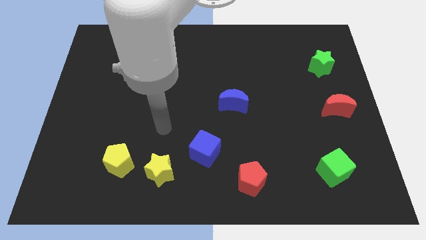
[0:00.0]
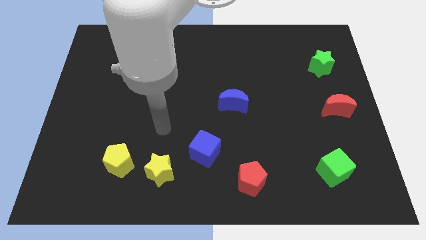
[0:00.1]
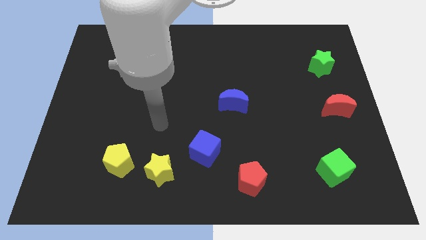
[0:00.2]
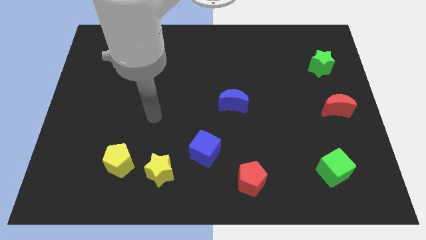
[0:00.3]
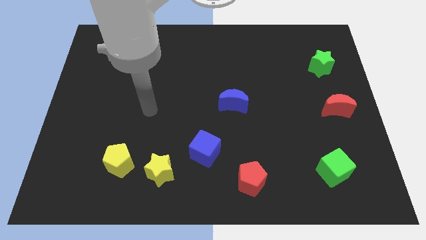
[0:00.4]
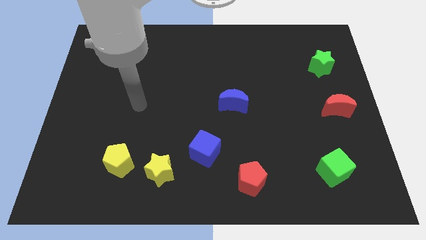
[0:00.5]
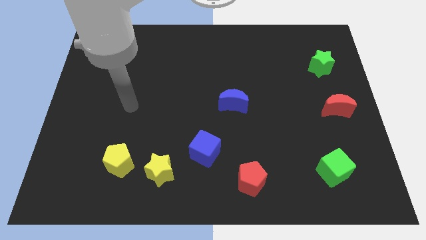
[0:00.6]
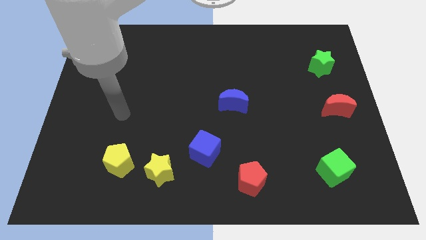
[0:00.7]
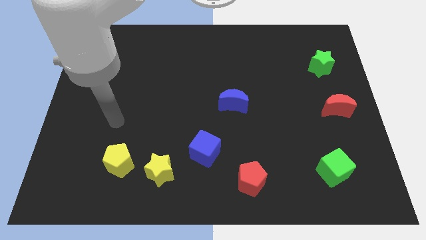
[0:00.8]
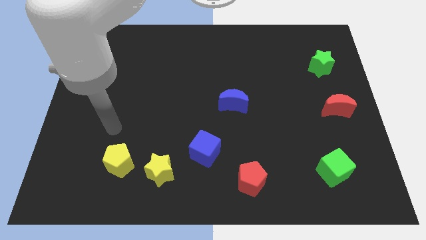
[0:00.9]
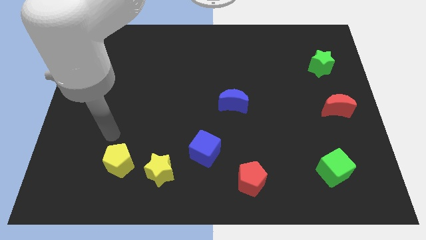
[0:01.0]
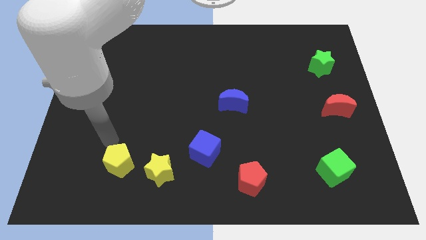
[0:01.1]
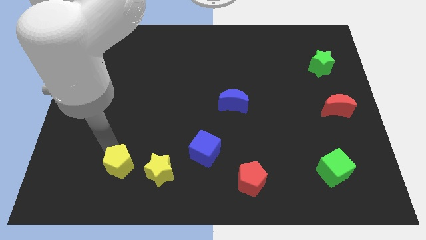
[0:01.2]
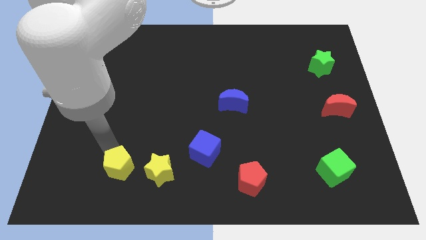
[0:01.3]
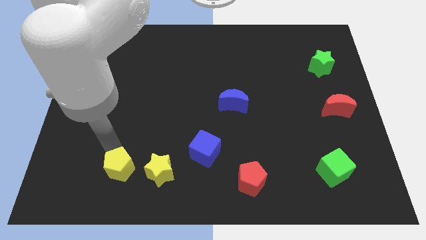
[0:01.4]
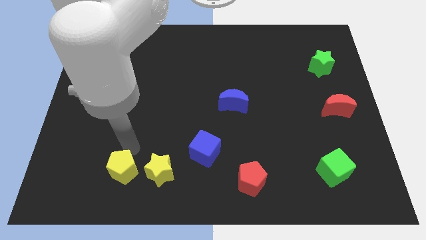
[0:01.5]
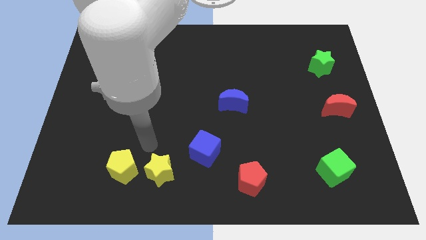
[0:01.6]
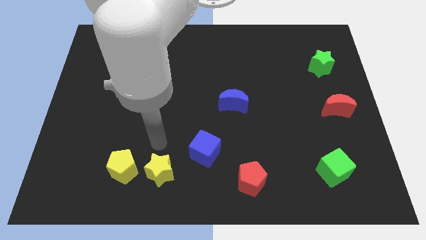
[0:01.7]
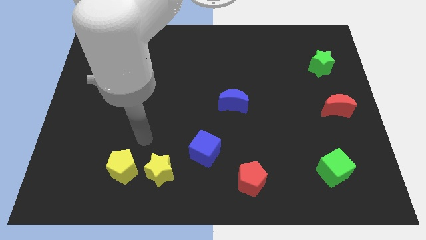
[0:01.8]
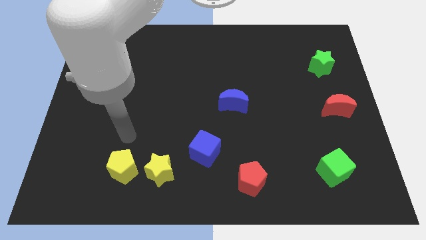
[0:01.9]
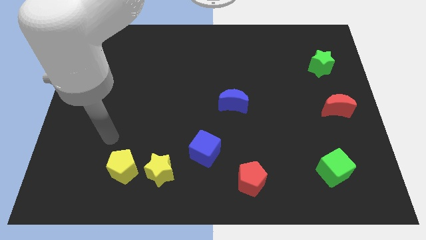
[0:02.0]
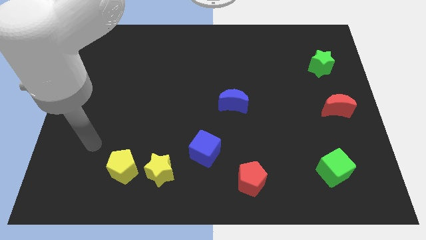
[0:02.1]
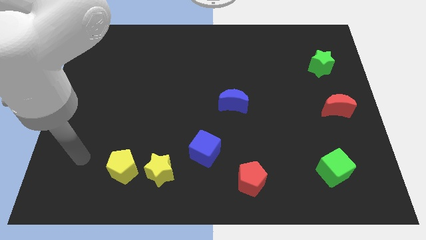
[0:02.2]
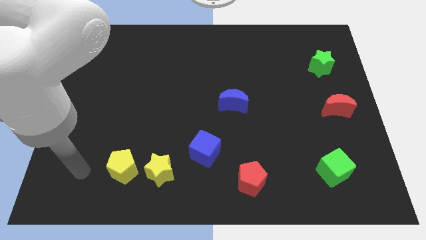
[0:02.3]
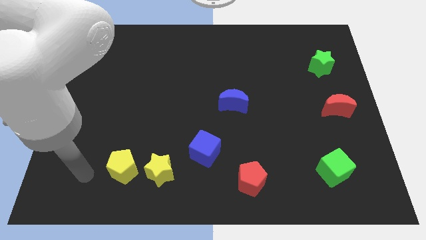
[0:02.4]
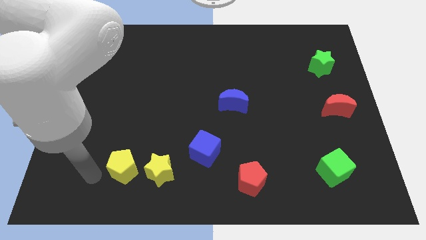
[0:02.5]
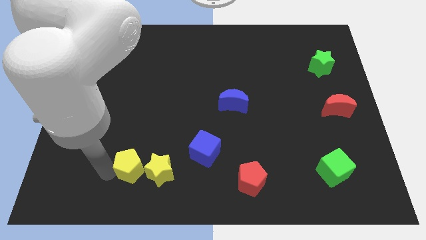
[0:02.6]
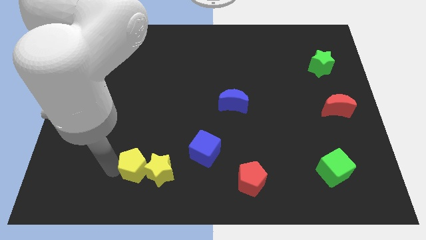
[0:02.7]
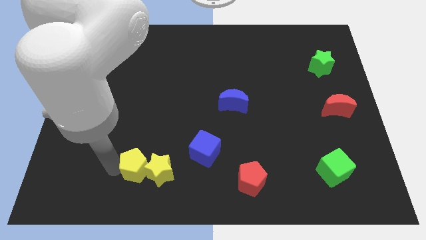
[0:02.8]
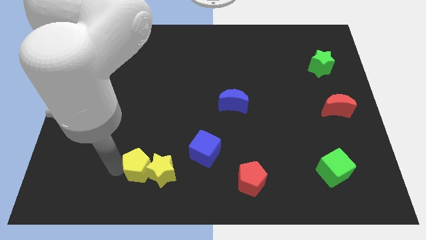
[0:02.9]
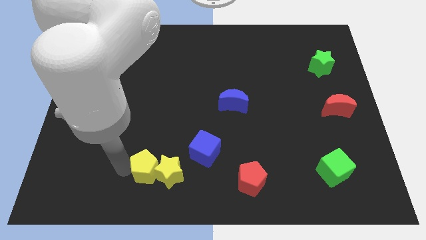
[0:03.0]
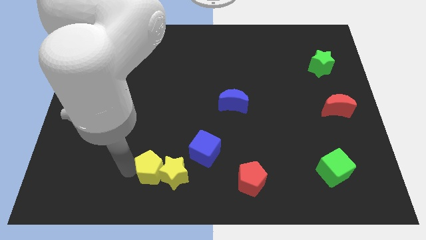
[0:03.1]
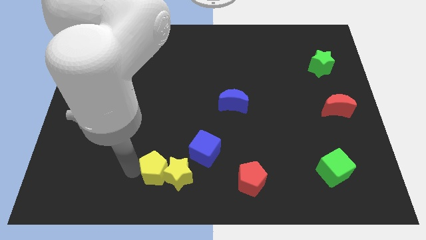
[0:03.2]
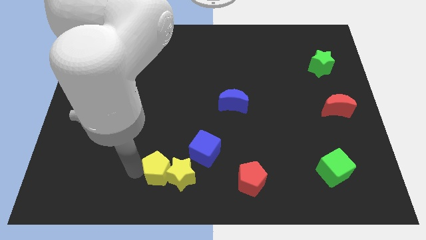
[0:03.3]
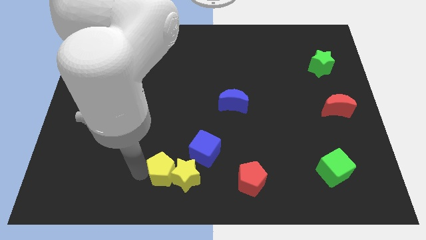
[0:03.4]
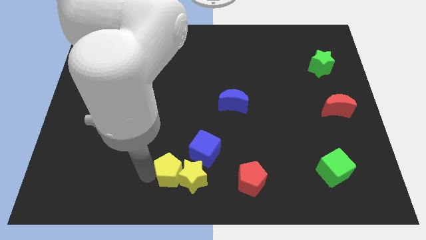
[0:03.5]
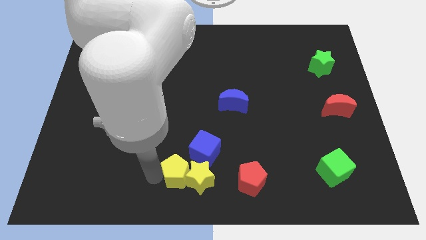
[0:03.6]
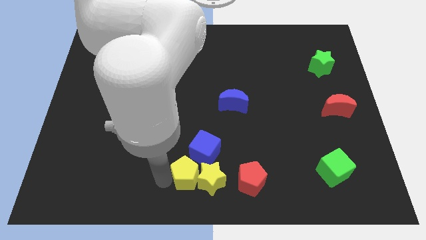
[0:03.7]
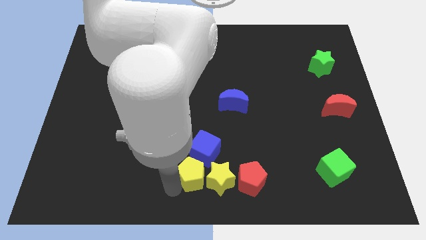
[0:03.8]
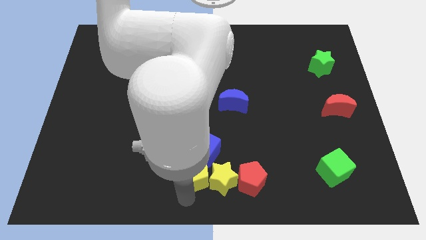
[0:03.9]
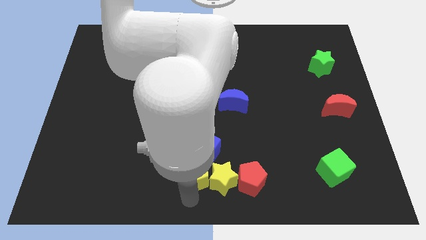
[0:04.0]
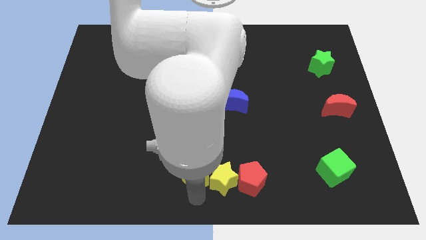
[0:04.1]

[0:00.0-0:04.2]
move the yellow blocks to the bottom center of the board

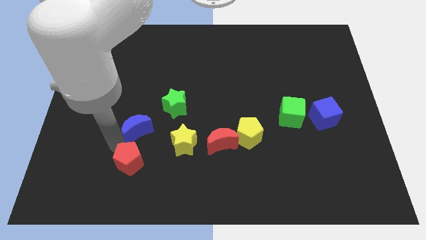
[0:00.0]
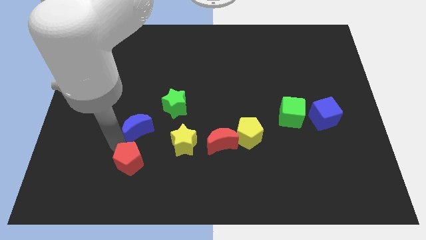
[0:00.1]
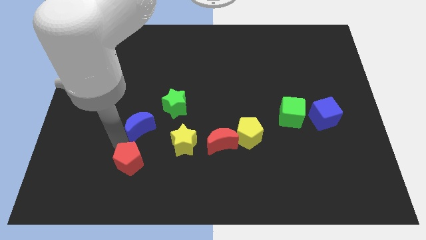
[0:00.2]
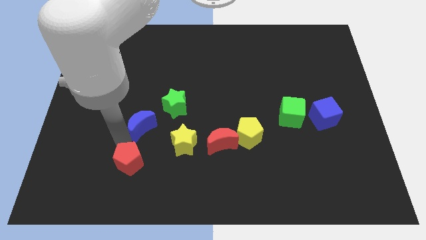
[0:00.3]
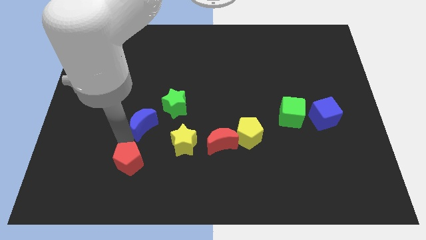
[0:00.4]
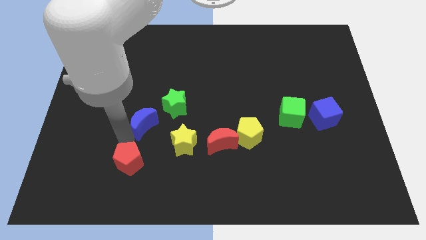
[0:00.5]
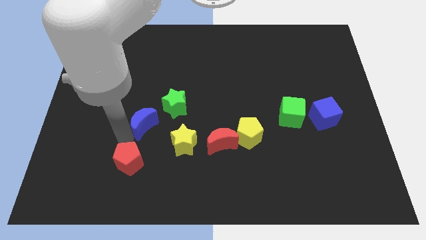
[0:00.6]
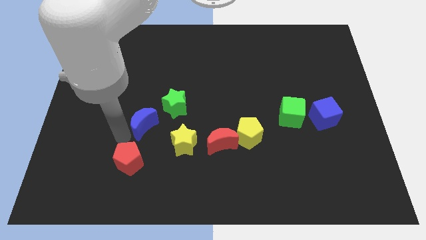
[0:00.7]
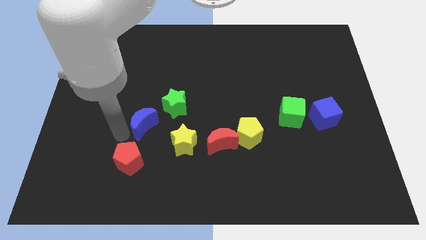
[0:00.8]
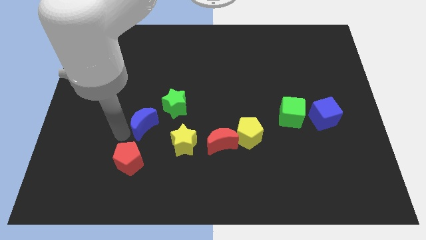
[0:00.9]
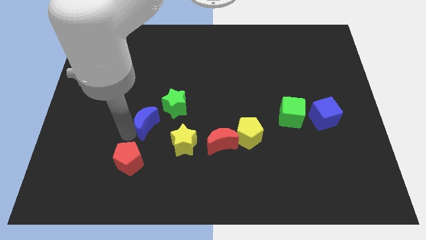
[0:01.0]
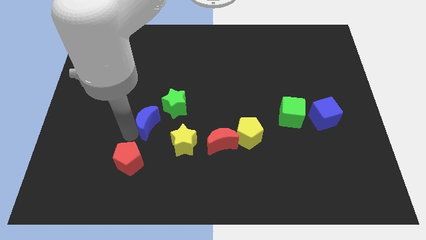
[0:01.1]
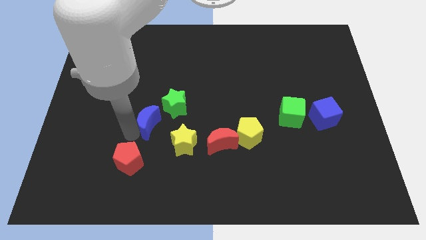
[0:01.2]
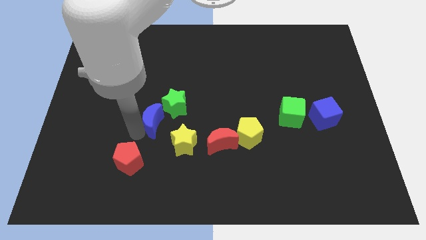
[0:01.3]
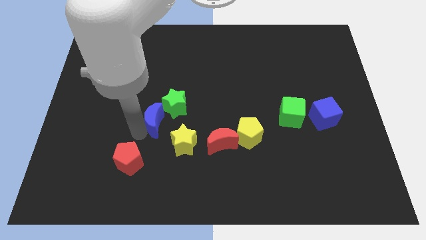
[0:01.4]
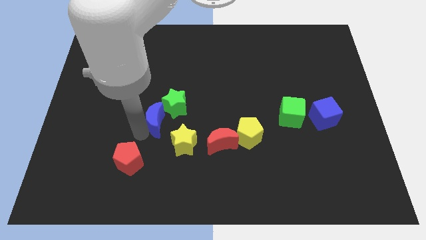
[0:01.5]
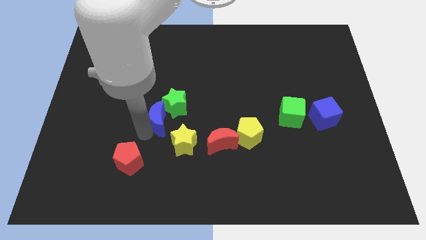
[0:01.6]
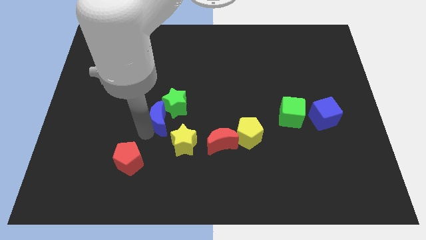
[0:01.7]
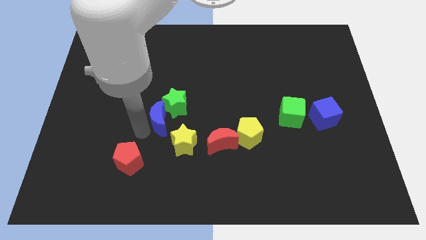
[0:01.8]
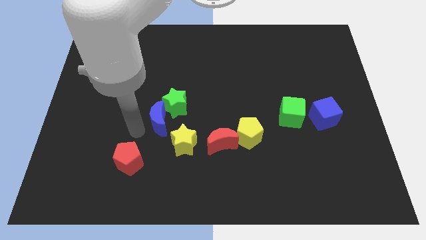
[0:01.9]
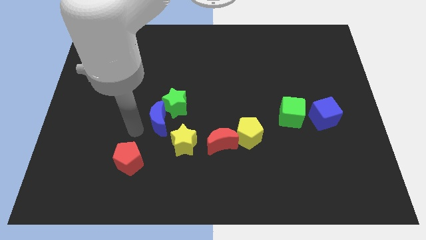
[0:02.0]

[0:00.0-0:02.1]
push blue moon into green star

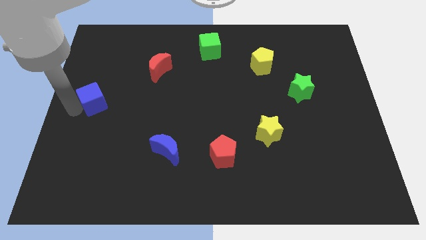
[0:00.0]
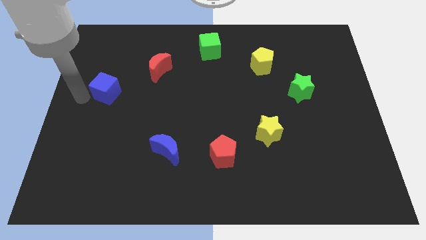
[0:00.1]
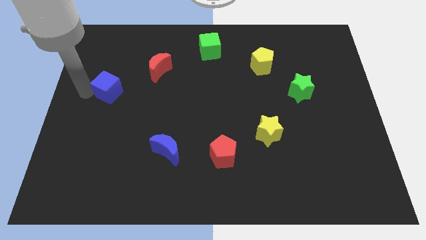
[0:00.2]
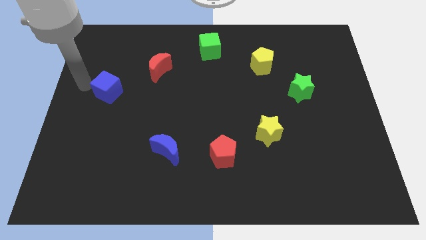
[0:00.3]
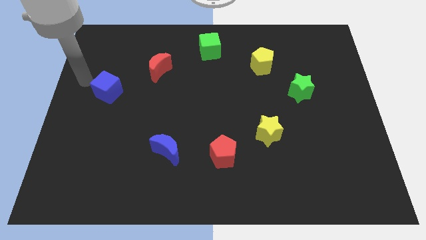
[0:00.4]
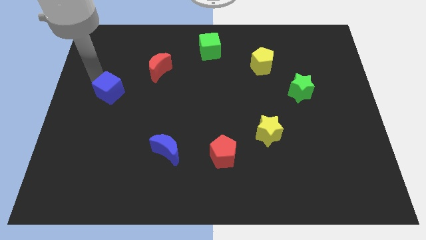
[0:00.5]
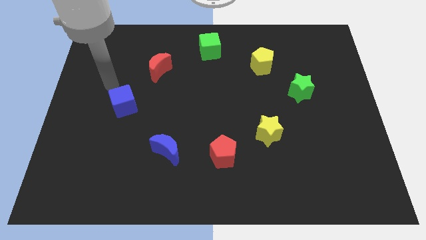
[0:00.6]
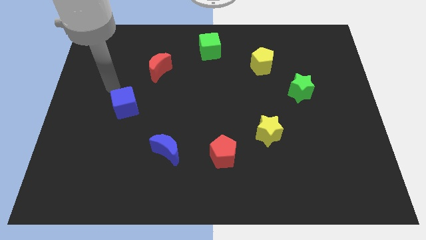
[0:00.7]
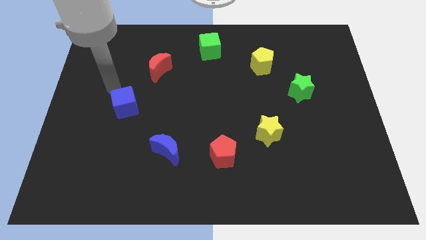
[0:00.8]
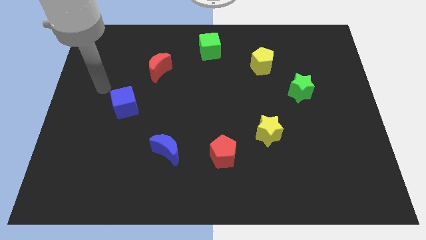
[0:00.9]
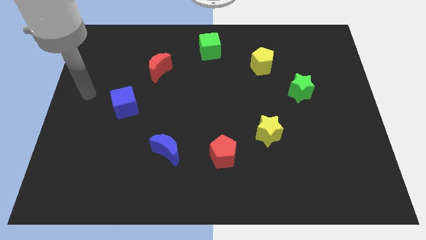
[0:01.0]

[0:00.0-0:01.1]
push the blue cube to the left of the red crescent

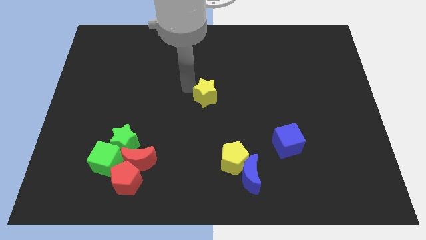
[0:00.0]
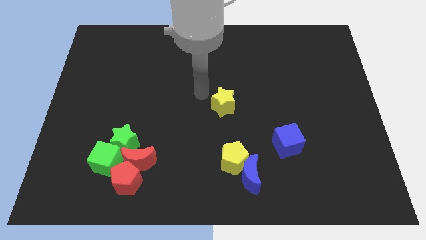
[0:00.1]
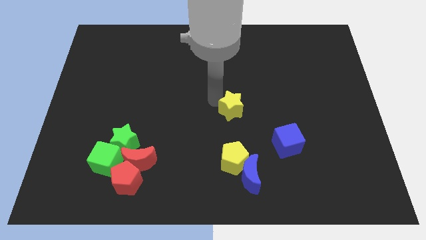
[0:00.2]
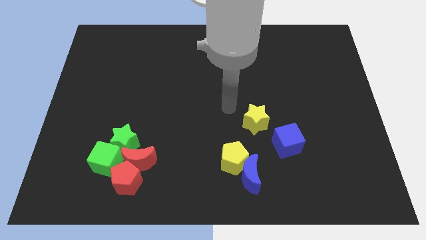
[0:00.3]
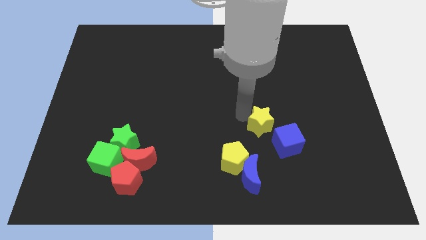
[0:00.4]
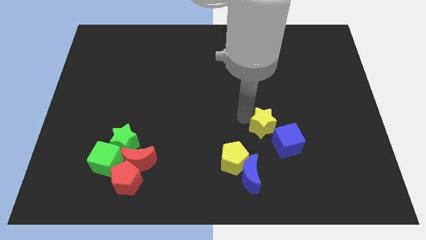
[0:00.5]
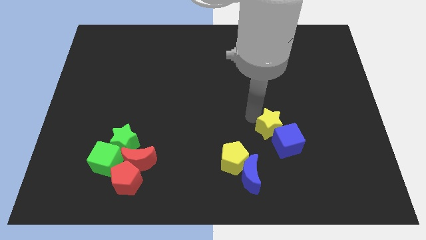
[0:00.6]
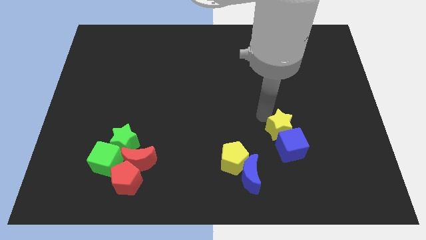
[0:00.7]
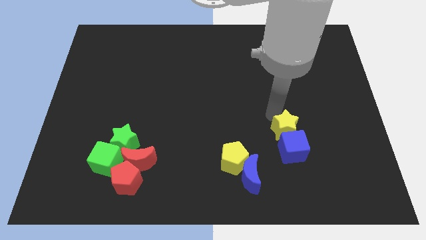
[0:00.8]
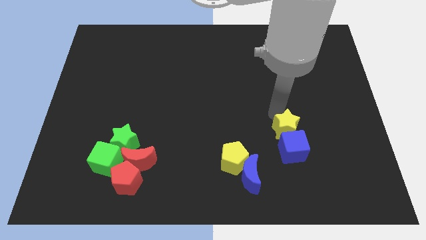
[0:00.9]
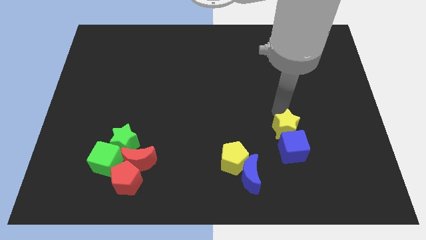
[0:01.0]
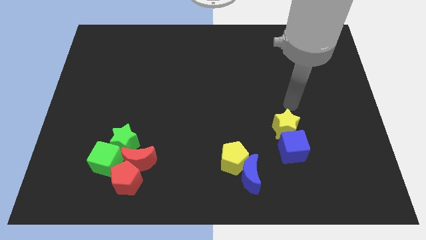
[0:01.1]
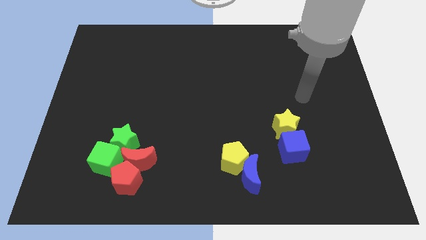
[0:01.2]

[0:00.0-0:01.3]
push the yellow star to the top of the blue cube

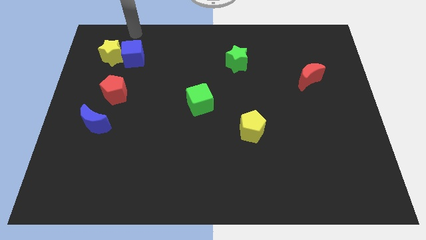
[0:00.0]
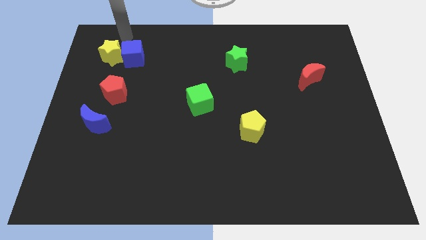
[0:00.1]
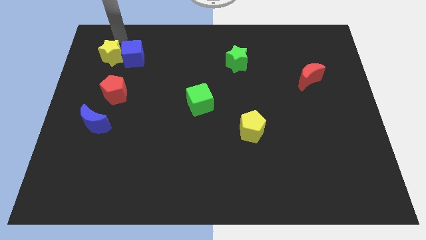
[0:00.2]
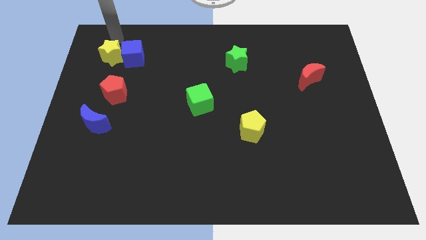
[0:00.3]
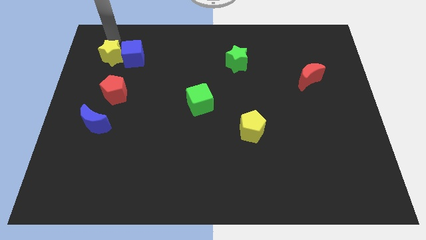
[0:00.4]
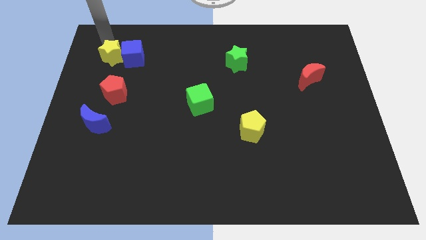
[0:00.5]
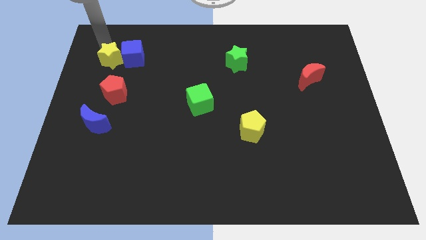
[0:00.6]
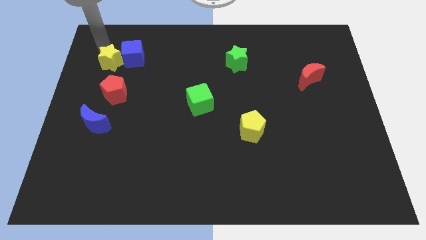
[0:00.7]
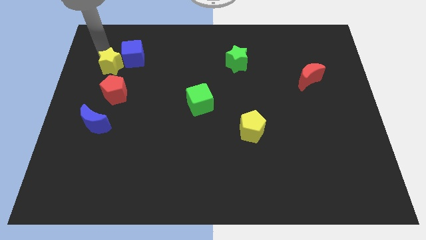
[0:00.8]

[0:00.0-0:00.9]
move the yellow star above to the red pentagon
